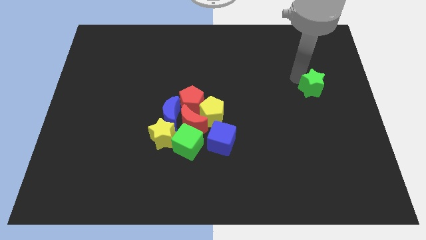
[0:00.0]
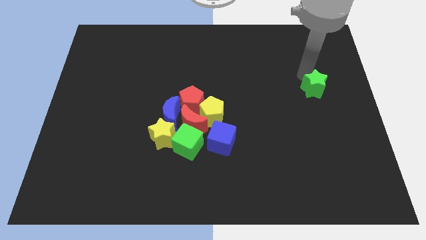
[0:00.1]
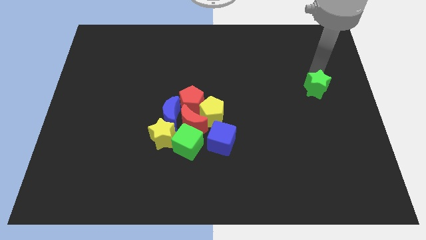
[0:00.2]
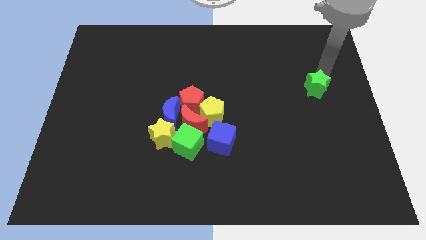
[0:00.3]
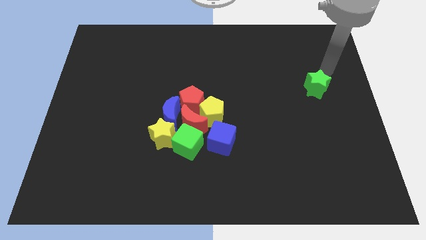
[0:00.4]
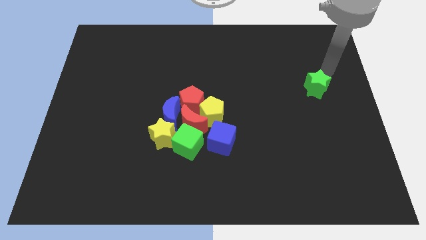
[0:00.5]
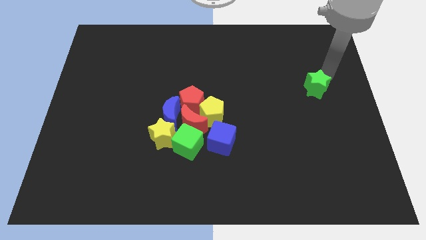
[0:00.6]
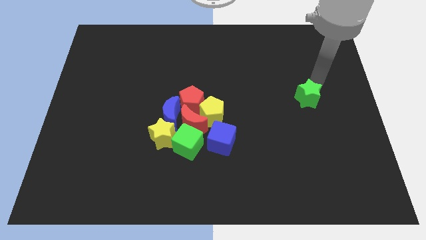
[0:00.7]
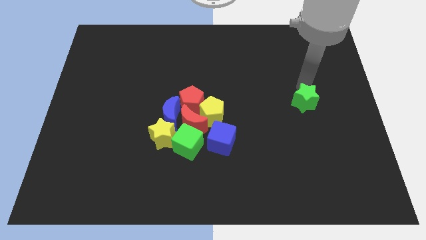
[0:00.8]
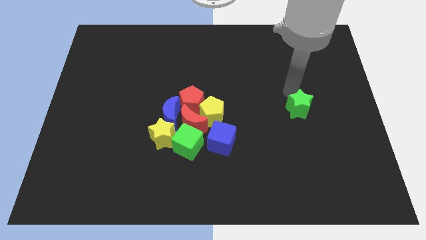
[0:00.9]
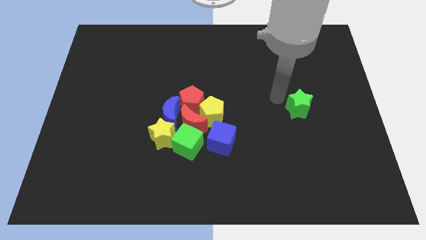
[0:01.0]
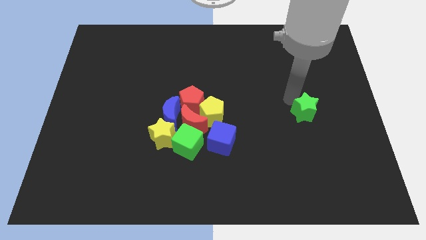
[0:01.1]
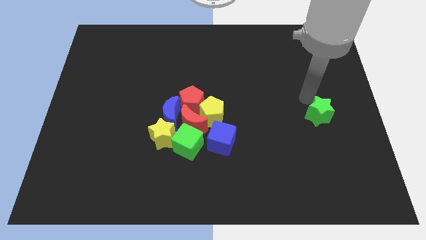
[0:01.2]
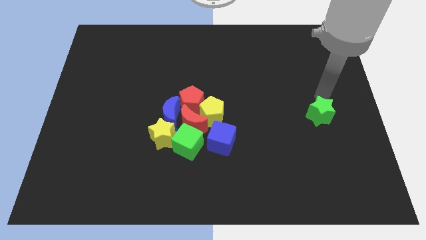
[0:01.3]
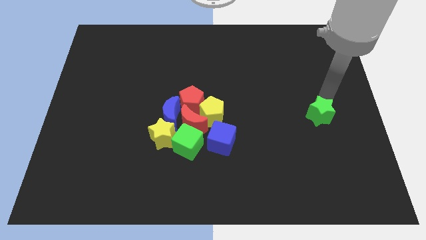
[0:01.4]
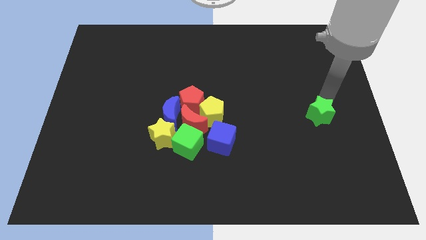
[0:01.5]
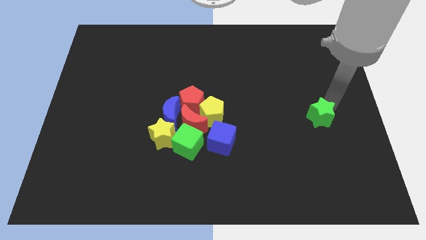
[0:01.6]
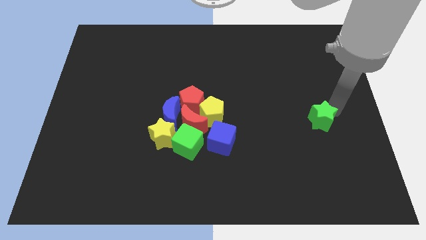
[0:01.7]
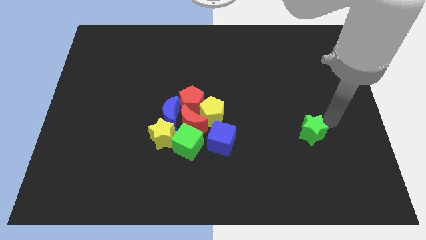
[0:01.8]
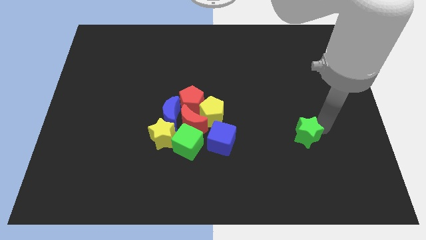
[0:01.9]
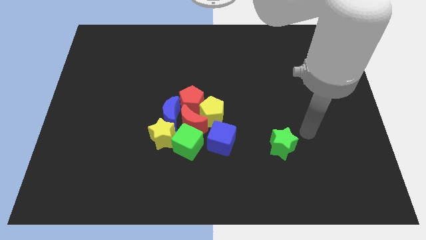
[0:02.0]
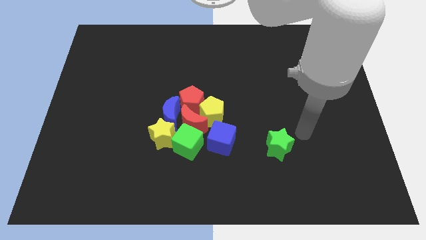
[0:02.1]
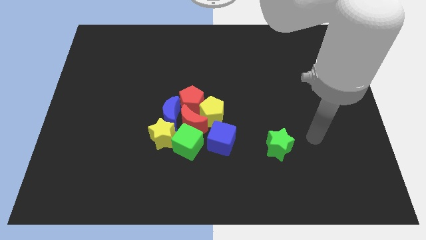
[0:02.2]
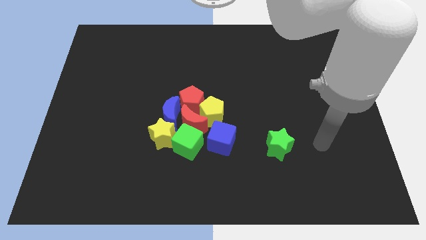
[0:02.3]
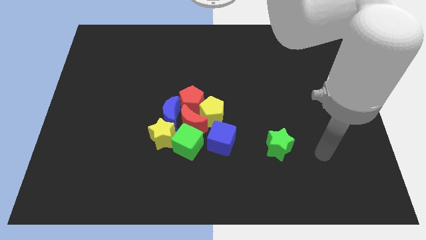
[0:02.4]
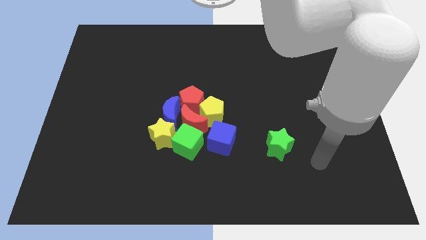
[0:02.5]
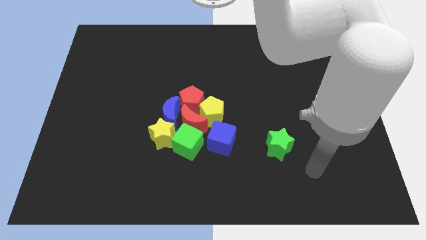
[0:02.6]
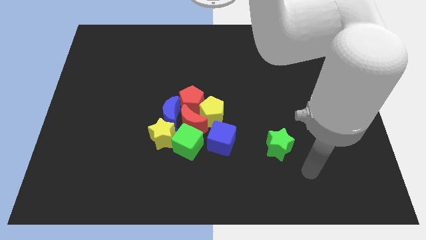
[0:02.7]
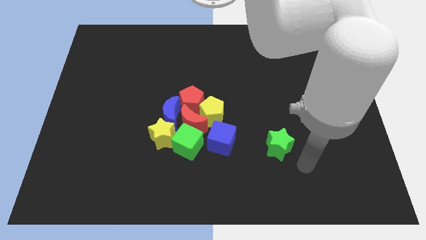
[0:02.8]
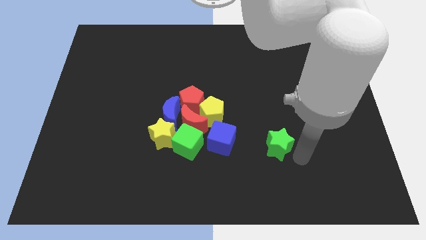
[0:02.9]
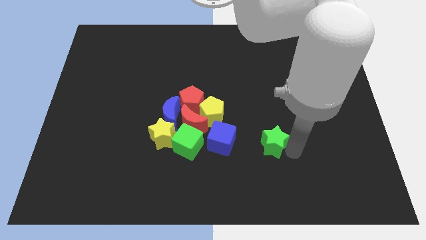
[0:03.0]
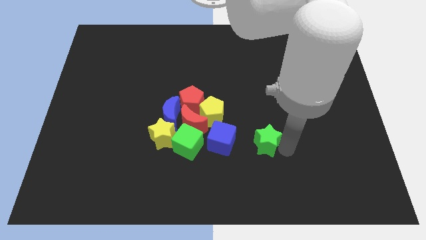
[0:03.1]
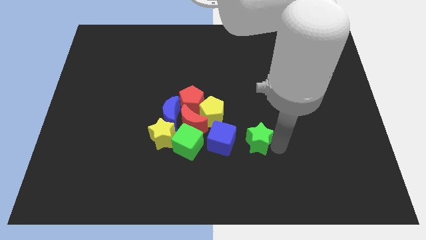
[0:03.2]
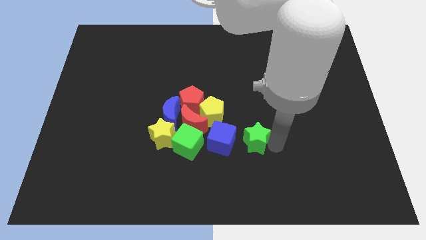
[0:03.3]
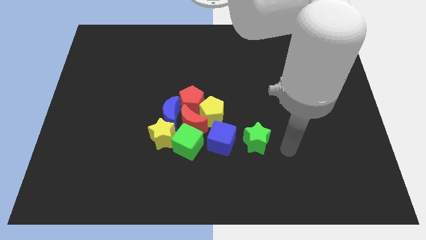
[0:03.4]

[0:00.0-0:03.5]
put the green star right to the blue cube

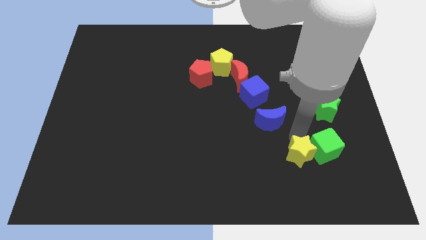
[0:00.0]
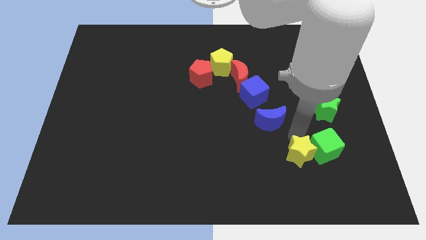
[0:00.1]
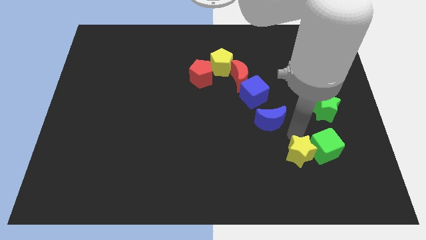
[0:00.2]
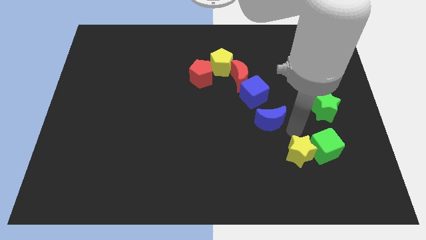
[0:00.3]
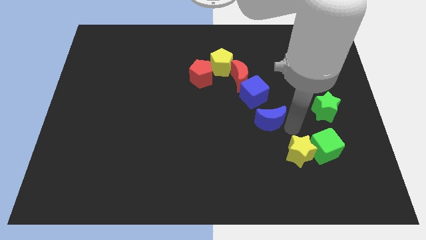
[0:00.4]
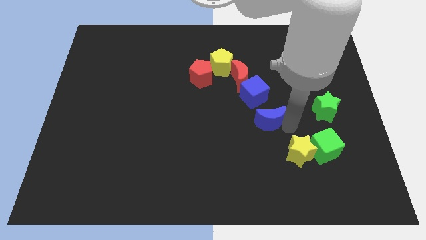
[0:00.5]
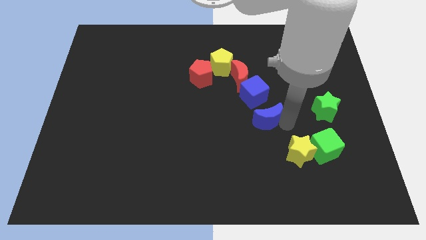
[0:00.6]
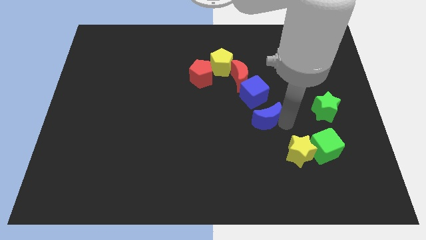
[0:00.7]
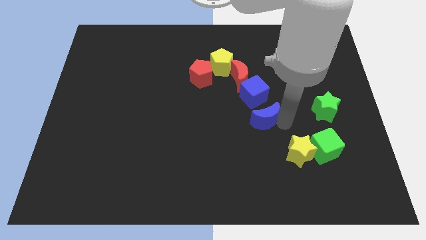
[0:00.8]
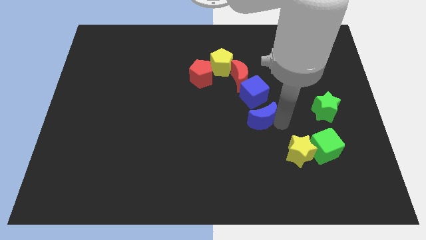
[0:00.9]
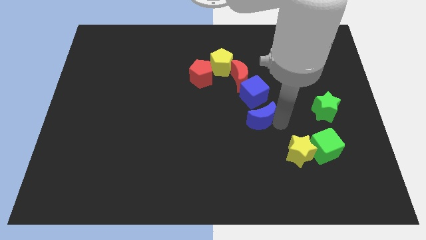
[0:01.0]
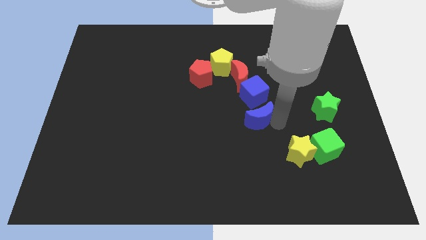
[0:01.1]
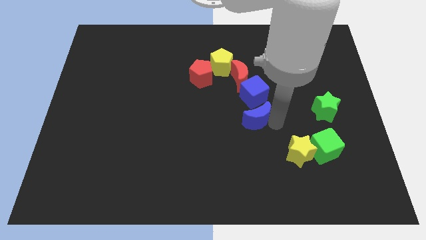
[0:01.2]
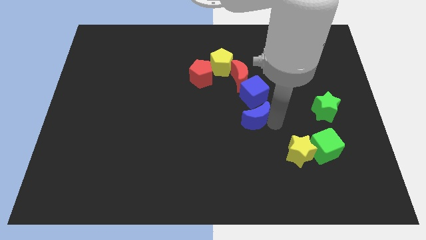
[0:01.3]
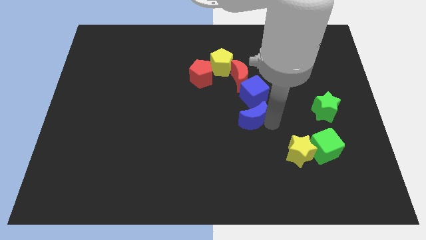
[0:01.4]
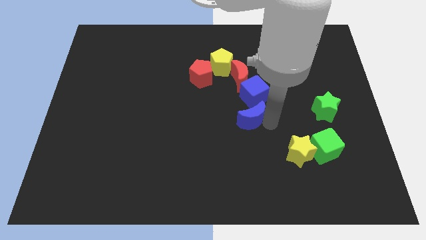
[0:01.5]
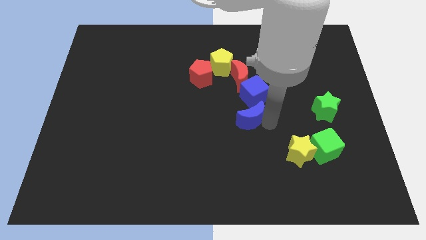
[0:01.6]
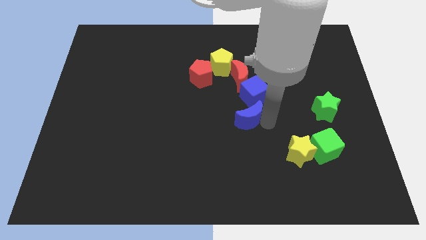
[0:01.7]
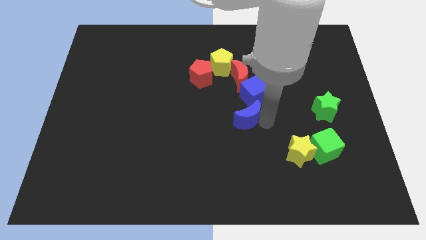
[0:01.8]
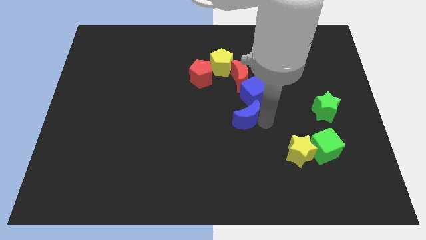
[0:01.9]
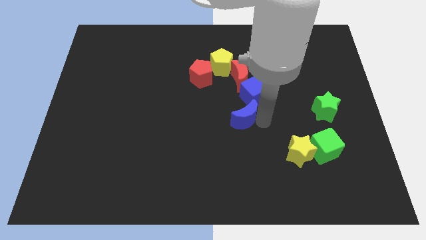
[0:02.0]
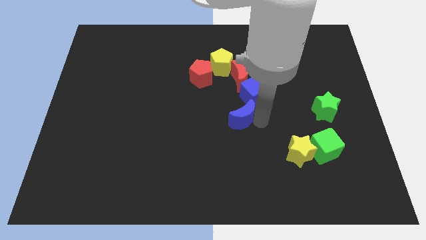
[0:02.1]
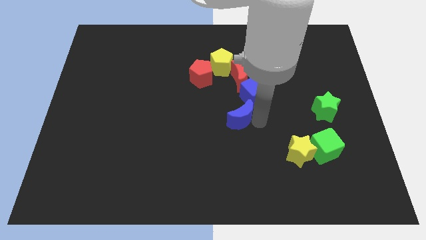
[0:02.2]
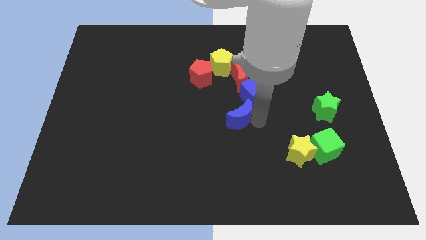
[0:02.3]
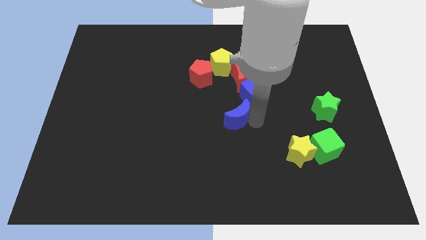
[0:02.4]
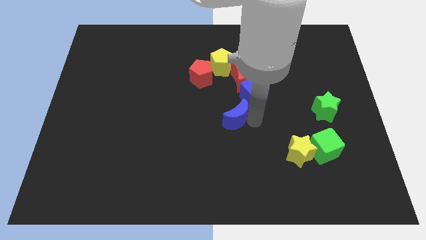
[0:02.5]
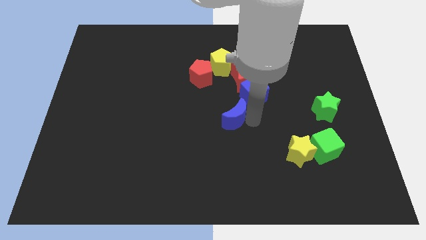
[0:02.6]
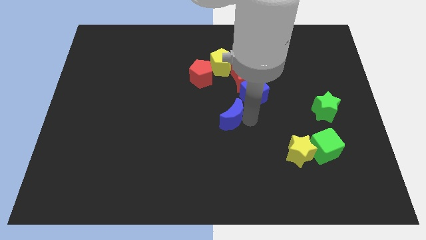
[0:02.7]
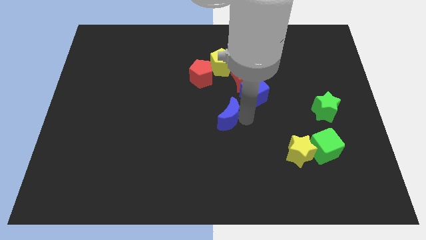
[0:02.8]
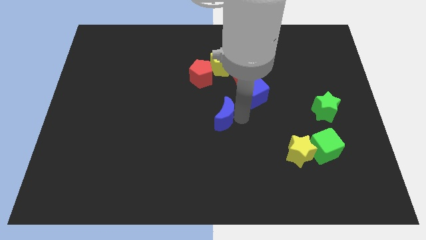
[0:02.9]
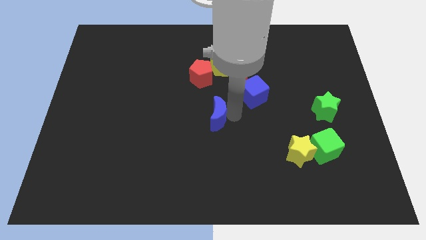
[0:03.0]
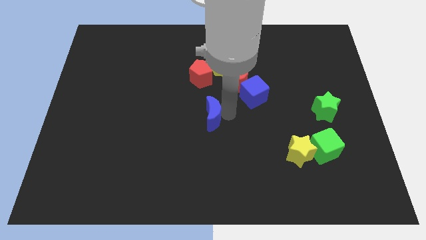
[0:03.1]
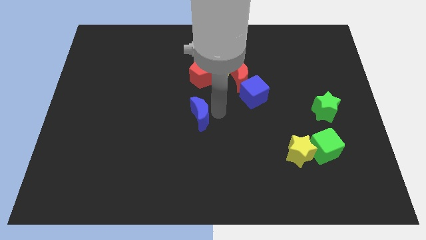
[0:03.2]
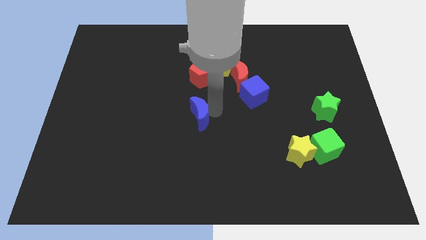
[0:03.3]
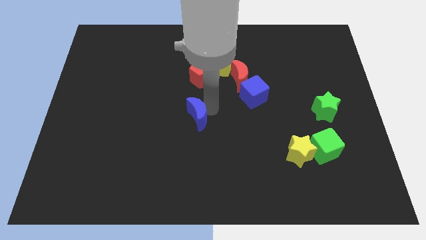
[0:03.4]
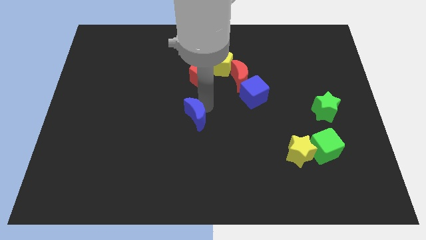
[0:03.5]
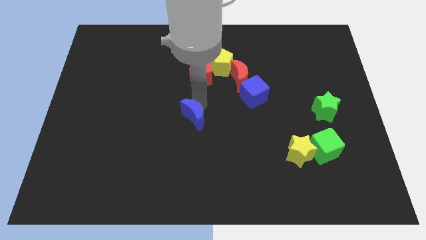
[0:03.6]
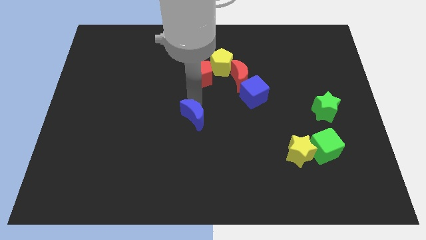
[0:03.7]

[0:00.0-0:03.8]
put the blue crescent towards the center of the board

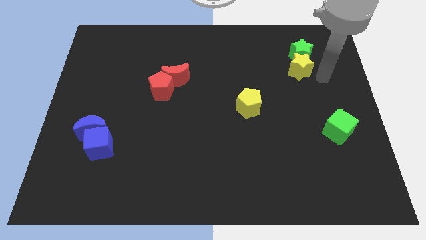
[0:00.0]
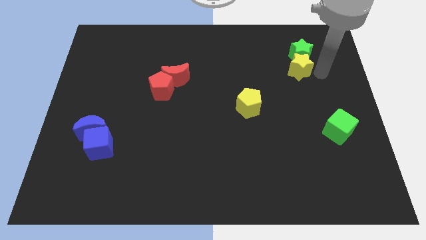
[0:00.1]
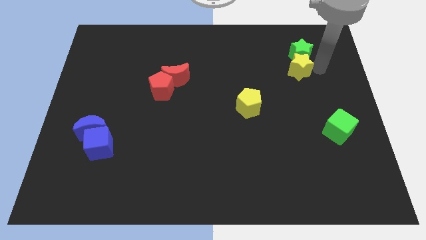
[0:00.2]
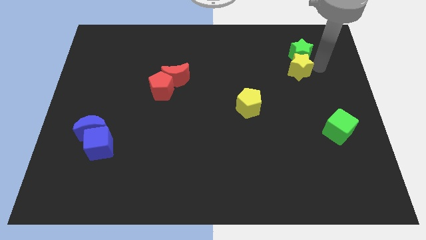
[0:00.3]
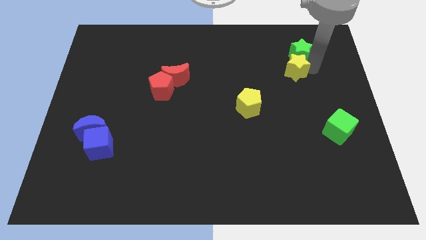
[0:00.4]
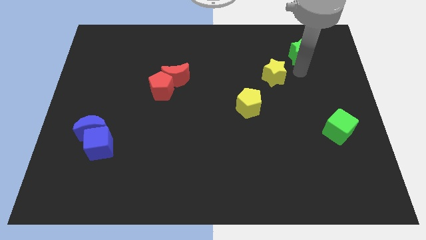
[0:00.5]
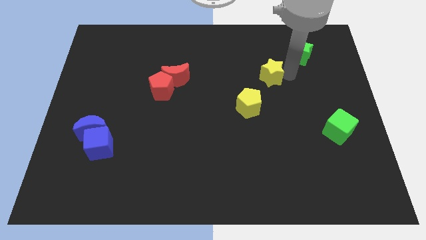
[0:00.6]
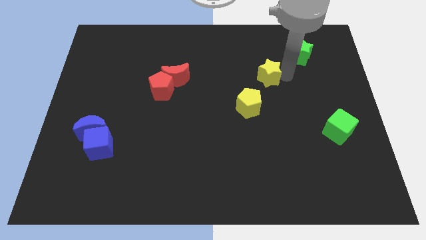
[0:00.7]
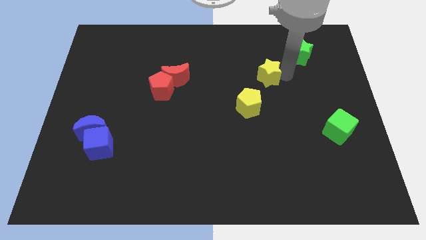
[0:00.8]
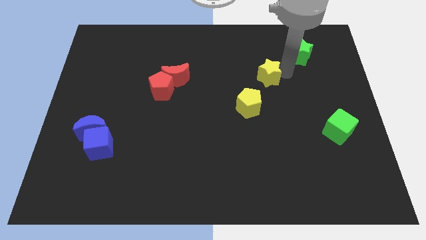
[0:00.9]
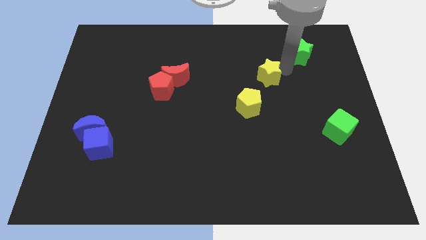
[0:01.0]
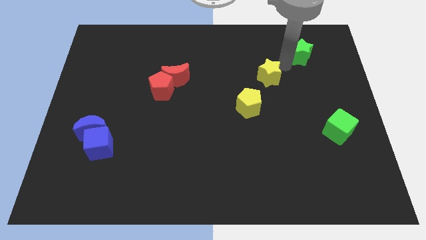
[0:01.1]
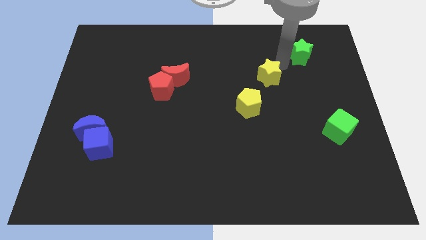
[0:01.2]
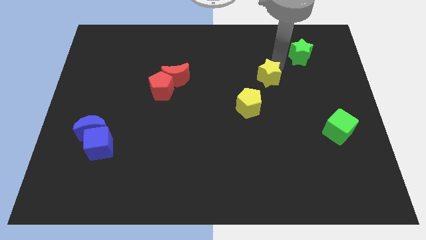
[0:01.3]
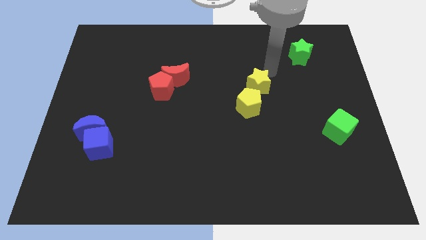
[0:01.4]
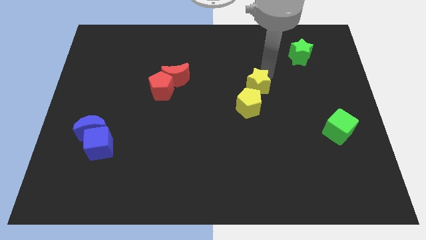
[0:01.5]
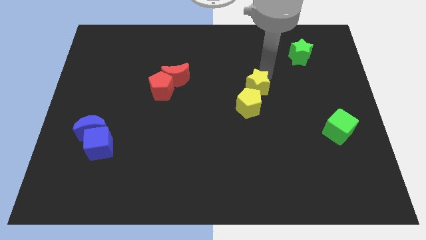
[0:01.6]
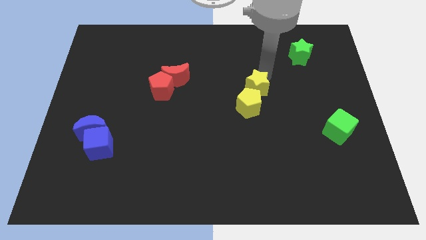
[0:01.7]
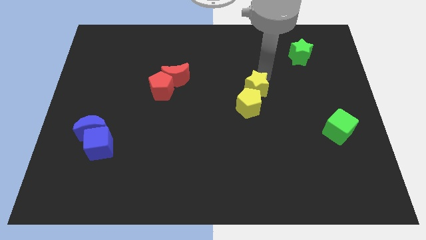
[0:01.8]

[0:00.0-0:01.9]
push the yellow star to the top of the yellow pentagon
